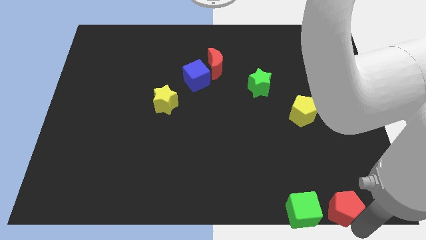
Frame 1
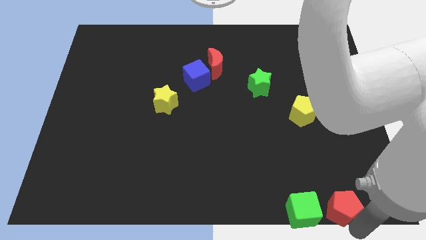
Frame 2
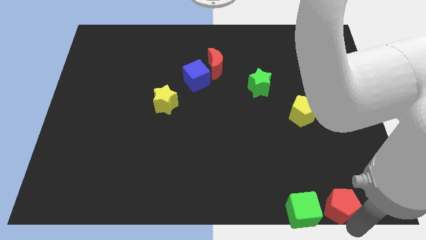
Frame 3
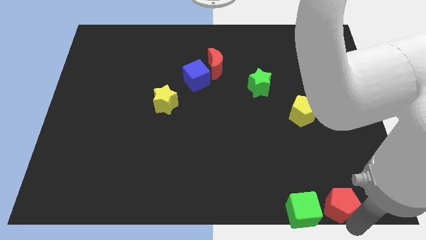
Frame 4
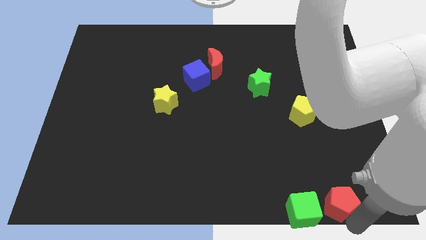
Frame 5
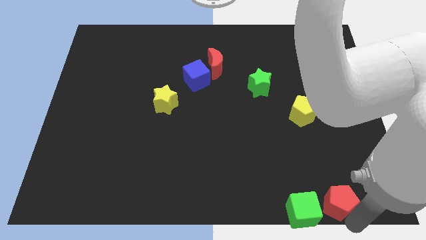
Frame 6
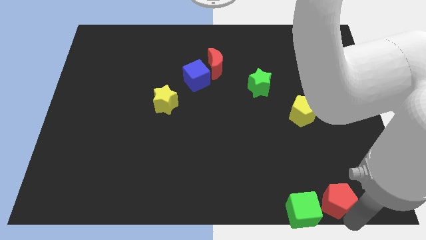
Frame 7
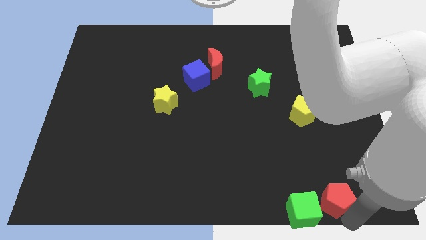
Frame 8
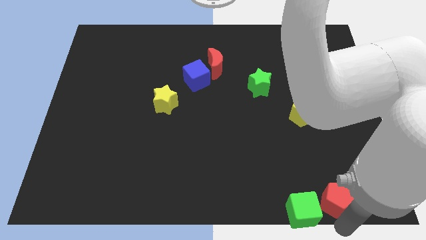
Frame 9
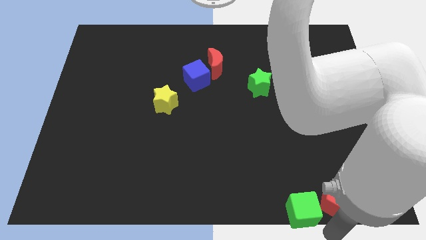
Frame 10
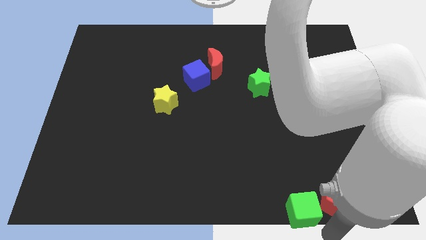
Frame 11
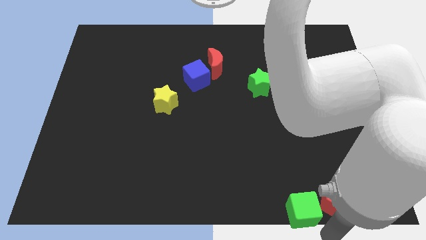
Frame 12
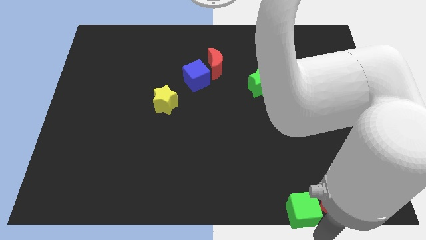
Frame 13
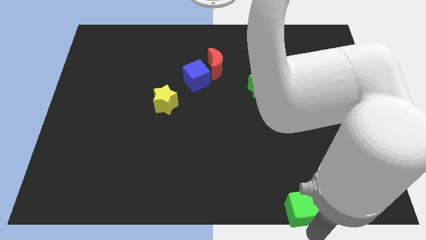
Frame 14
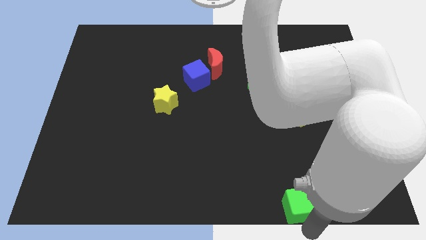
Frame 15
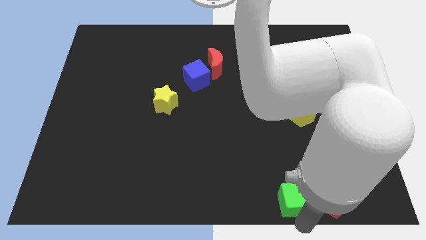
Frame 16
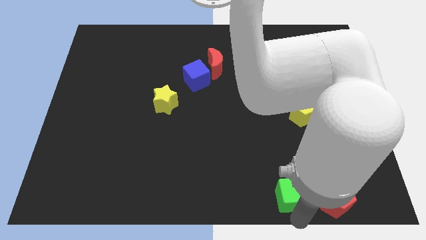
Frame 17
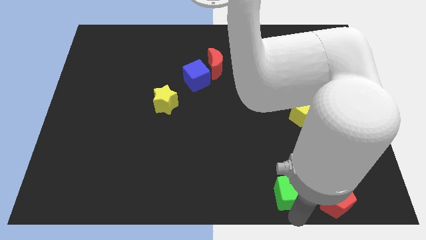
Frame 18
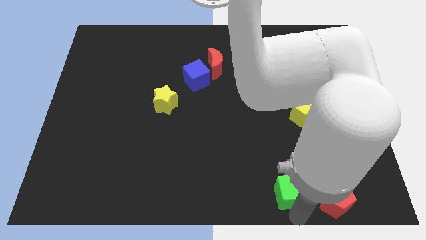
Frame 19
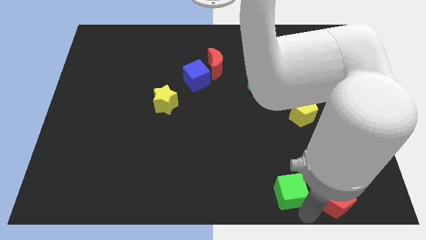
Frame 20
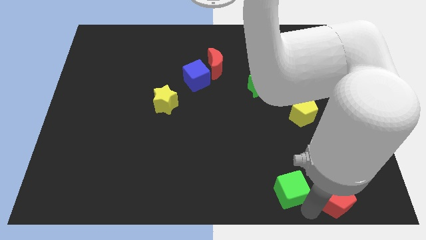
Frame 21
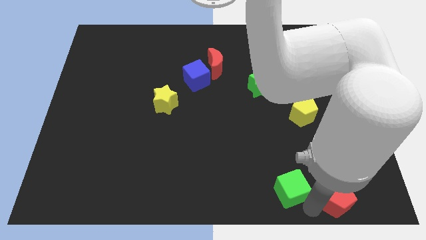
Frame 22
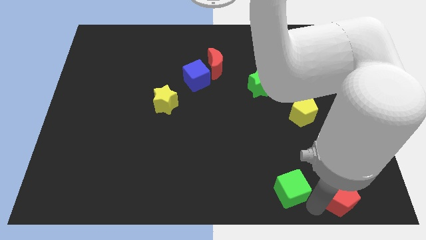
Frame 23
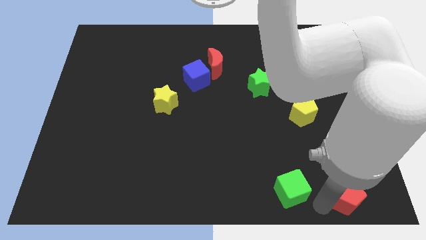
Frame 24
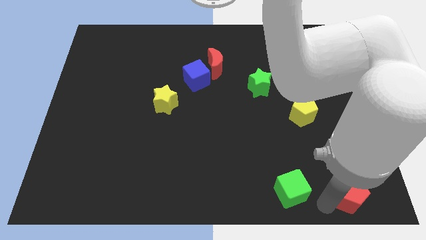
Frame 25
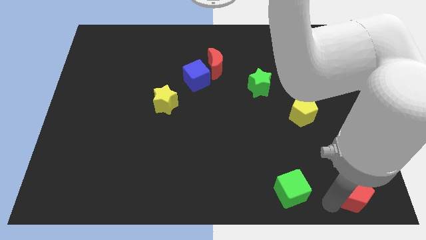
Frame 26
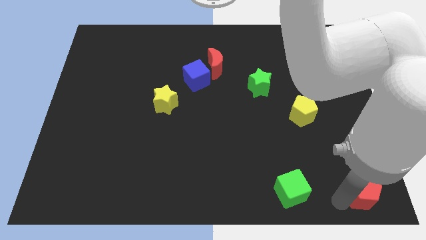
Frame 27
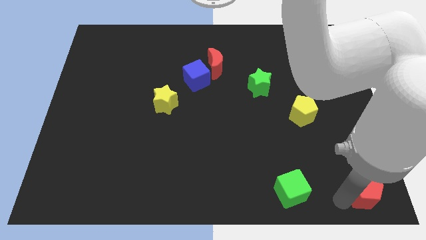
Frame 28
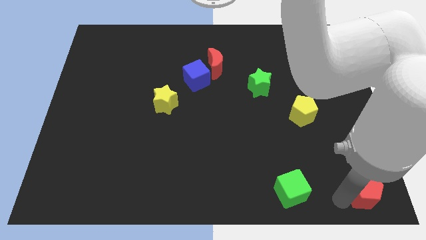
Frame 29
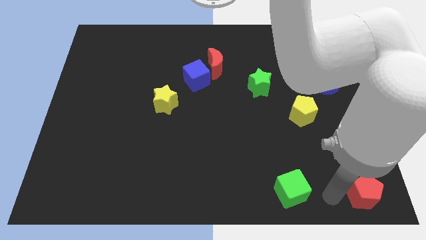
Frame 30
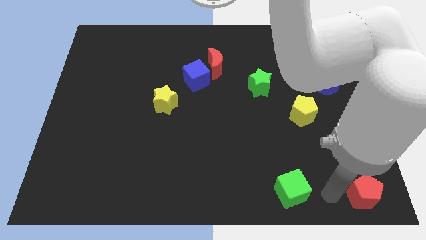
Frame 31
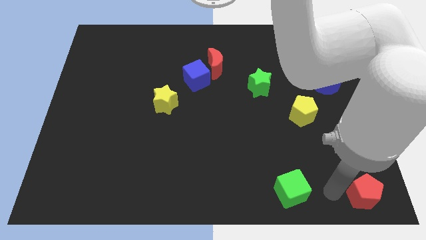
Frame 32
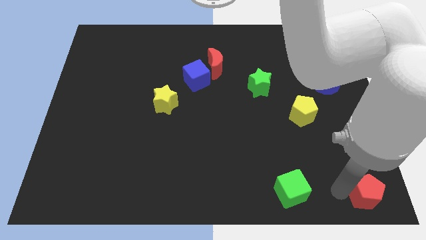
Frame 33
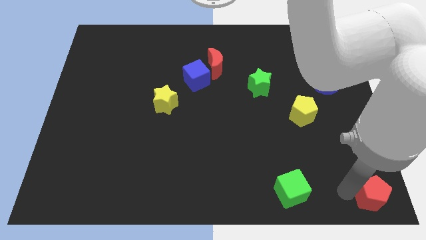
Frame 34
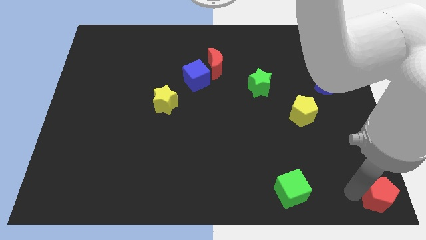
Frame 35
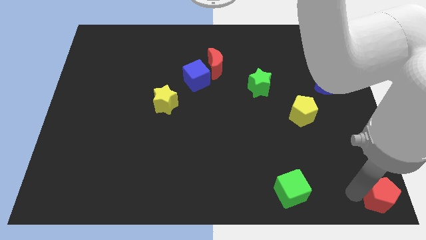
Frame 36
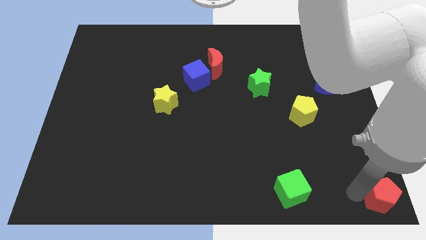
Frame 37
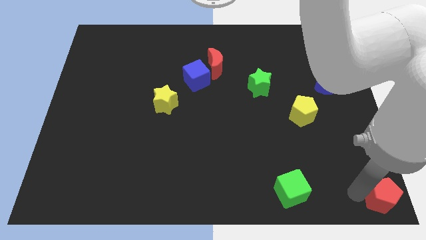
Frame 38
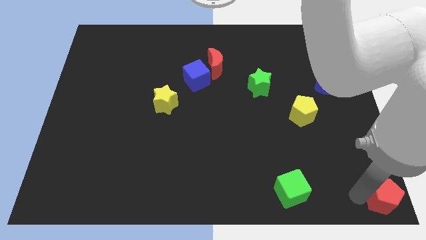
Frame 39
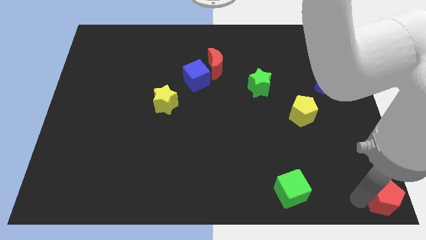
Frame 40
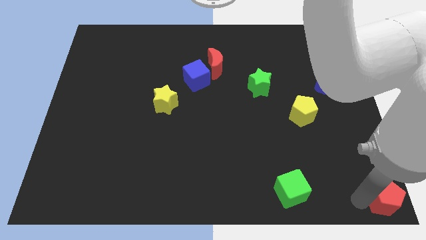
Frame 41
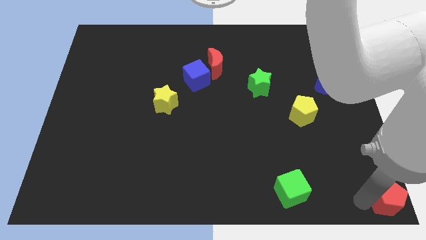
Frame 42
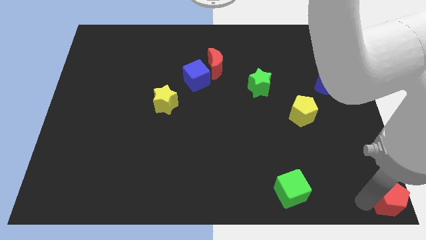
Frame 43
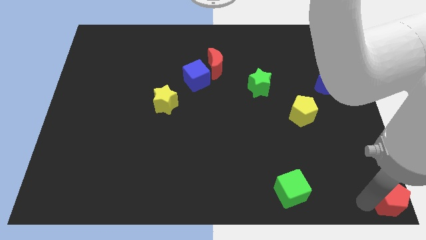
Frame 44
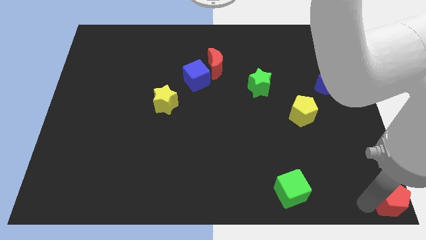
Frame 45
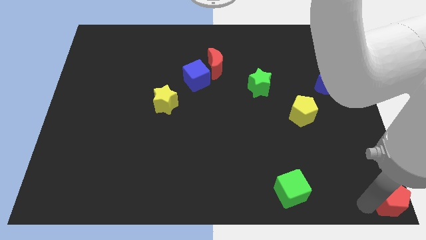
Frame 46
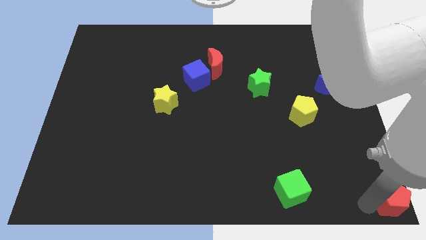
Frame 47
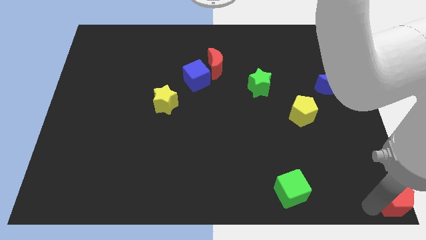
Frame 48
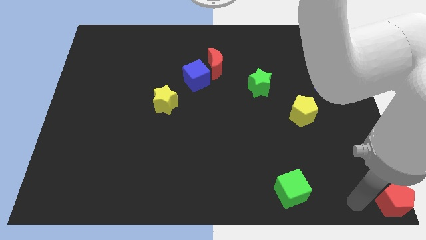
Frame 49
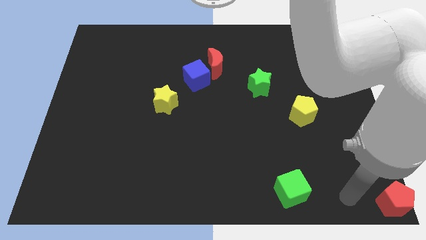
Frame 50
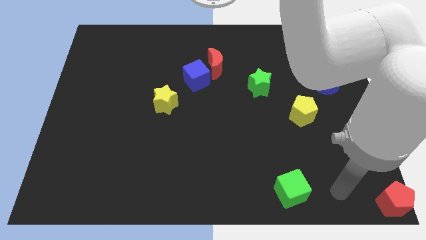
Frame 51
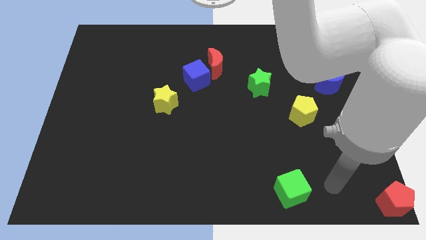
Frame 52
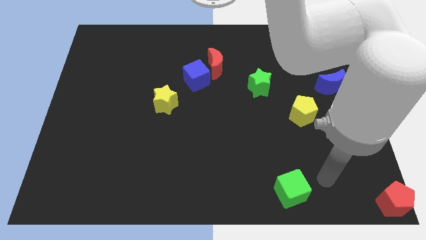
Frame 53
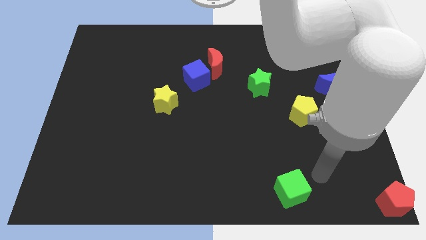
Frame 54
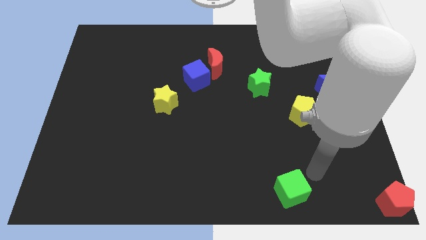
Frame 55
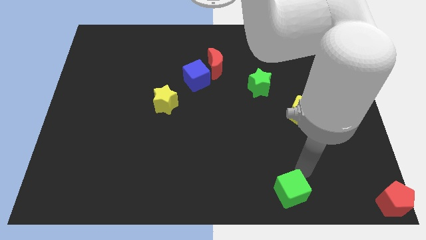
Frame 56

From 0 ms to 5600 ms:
separate red pentagon from the green cube

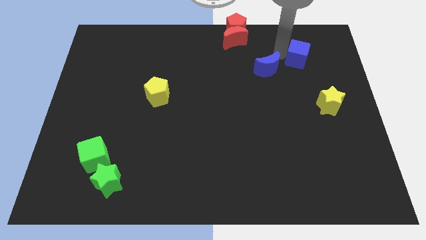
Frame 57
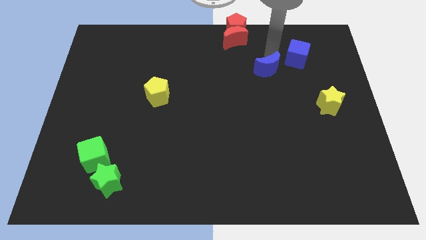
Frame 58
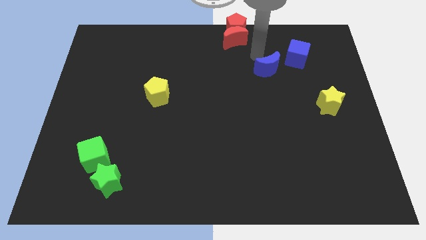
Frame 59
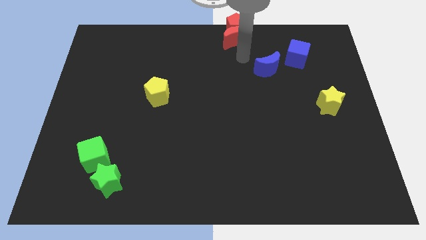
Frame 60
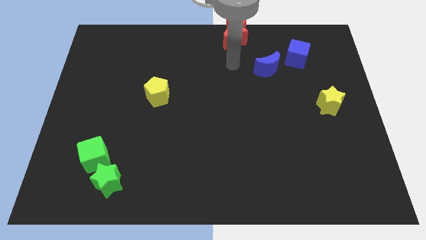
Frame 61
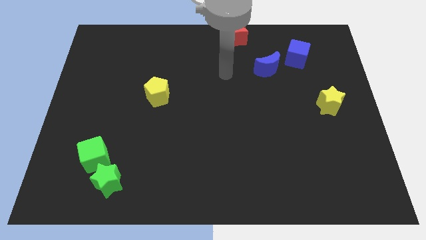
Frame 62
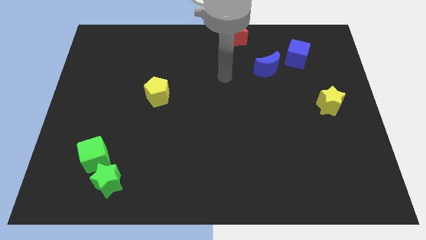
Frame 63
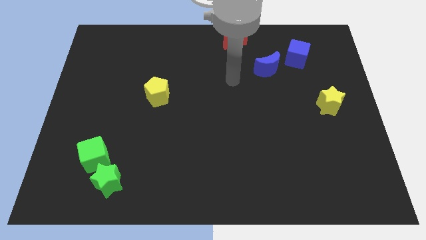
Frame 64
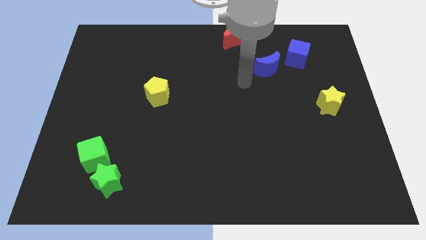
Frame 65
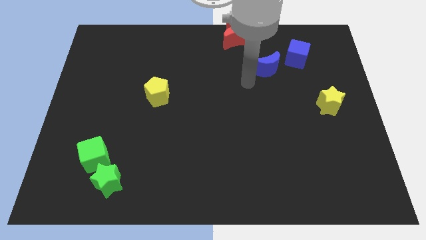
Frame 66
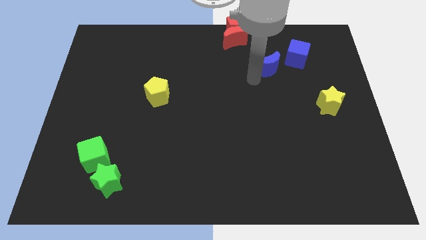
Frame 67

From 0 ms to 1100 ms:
point your arm at the bottom left side of blue moon

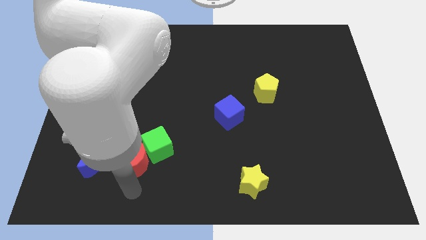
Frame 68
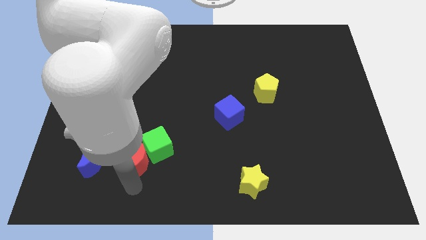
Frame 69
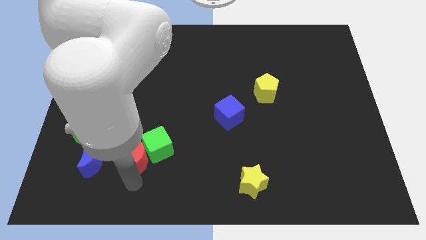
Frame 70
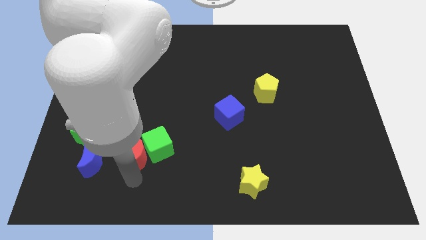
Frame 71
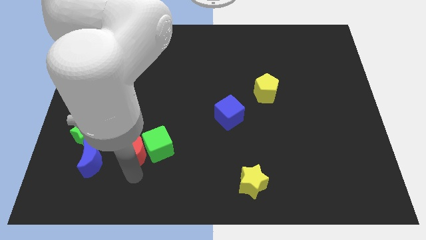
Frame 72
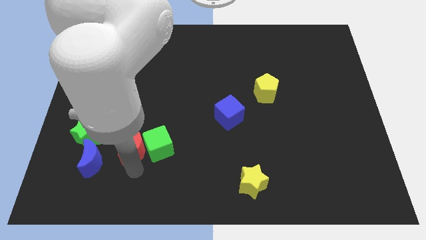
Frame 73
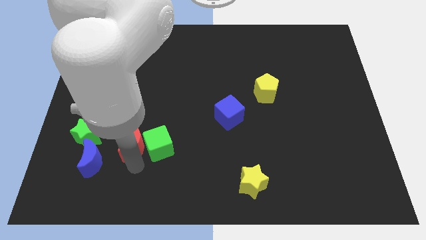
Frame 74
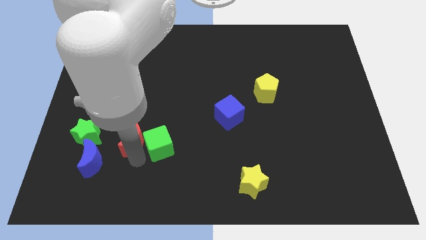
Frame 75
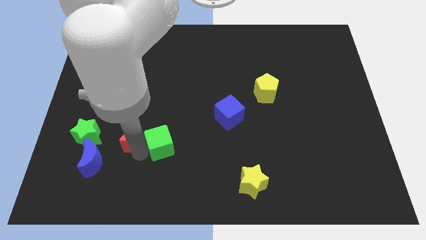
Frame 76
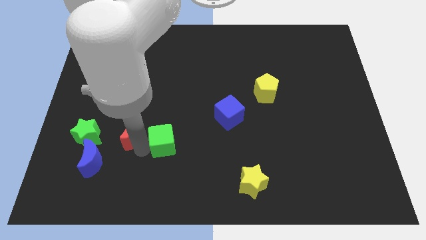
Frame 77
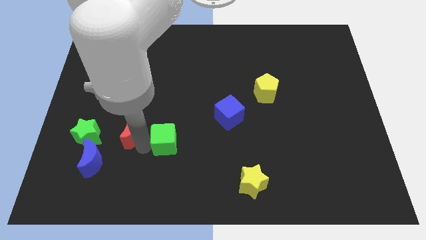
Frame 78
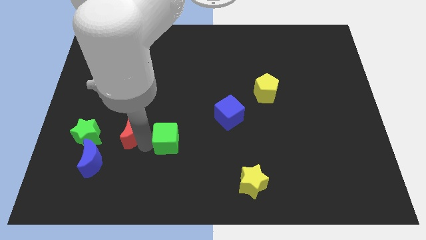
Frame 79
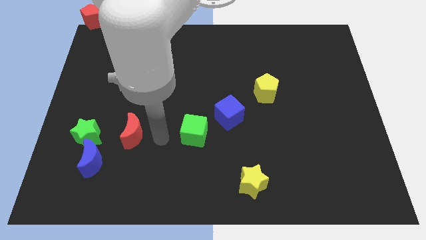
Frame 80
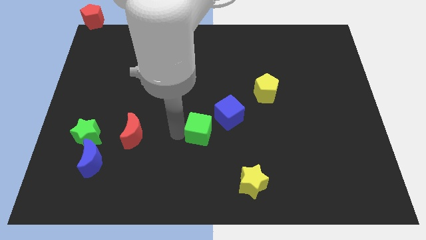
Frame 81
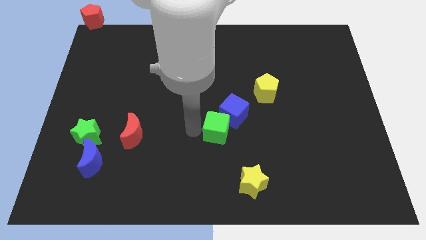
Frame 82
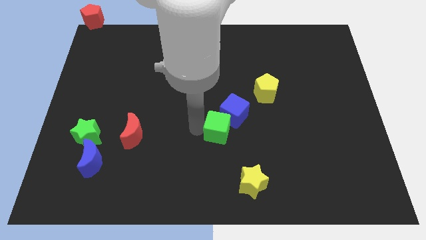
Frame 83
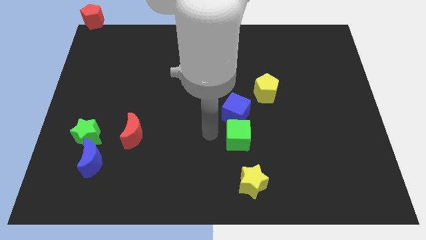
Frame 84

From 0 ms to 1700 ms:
move green cube and the red moon away from each other

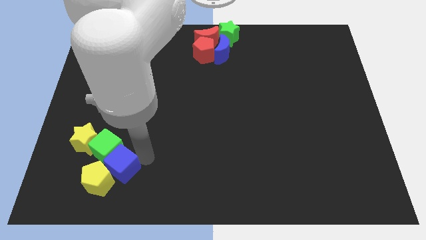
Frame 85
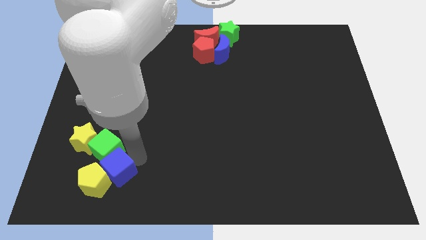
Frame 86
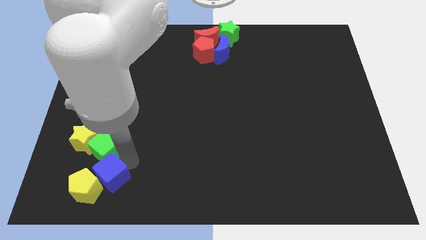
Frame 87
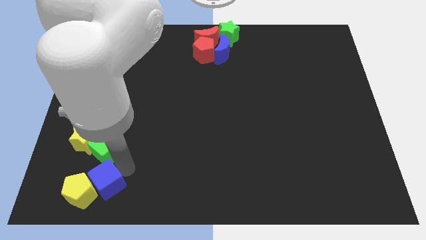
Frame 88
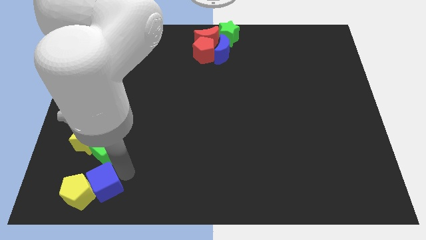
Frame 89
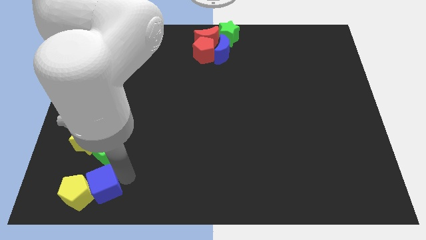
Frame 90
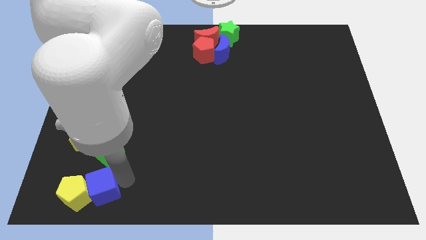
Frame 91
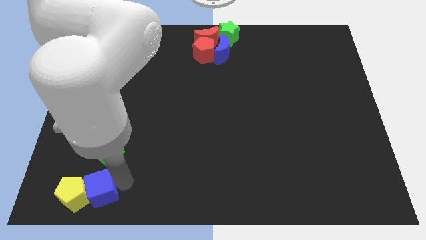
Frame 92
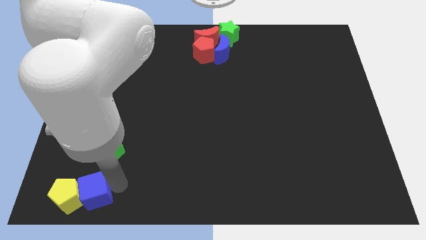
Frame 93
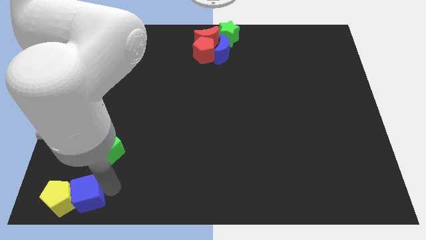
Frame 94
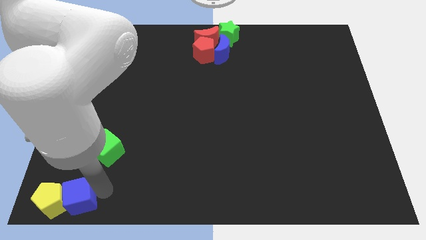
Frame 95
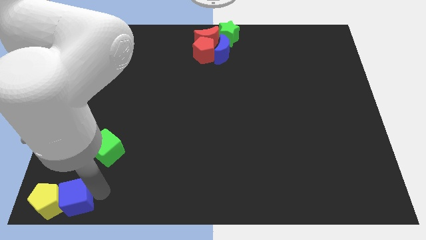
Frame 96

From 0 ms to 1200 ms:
push the yellow pentagon with a blue cube to the bottom left of the board
